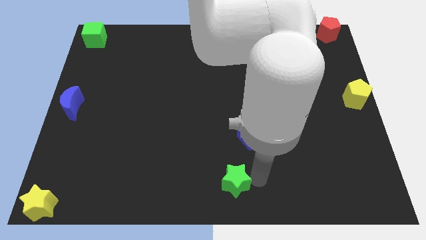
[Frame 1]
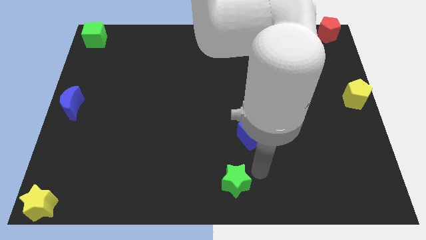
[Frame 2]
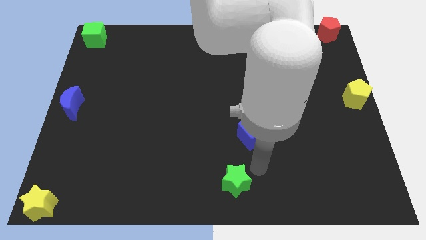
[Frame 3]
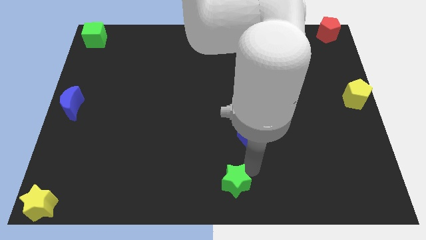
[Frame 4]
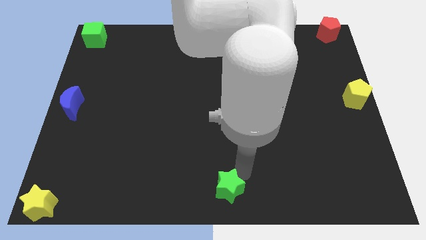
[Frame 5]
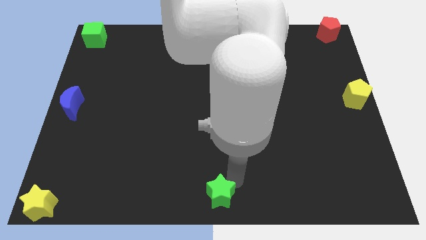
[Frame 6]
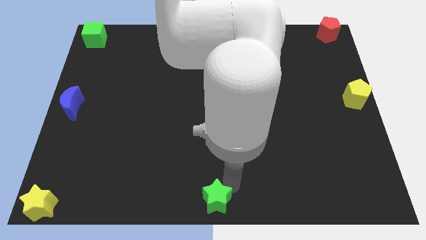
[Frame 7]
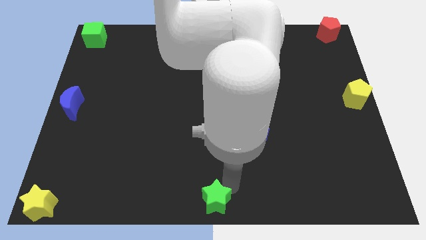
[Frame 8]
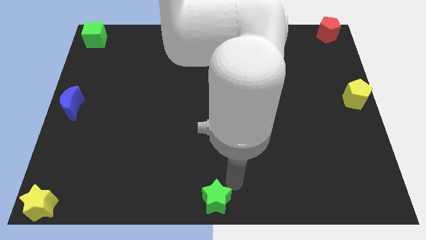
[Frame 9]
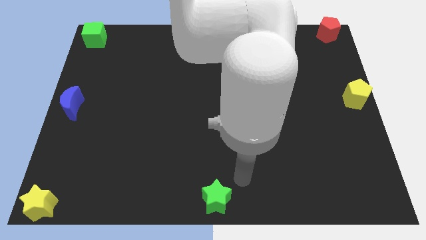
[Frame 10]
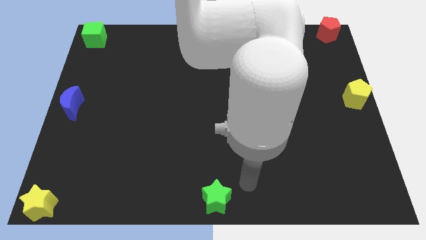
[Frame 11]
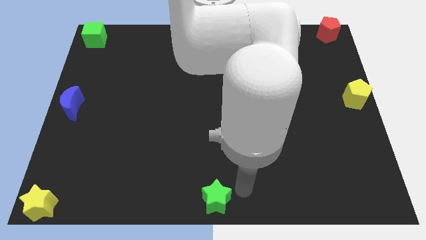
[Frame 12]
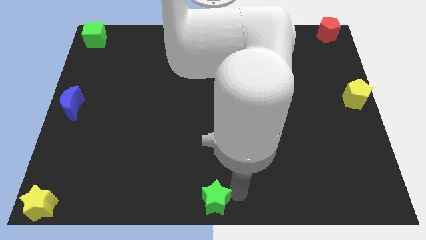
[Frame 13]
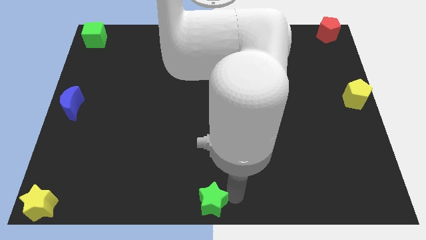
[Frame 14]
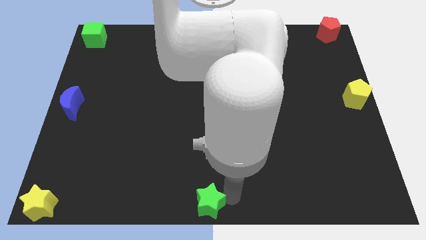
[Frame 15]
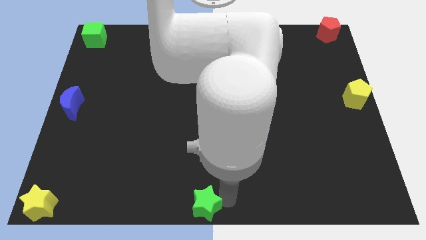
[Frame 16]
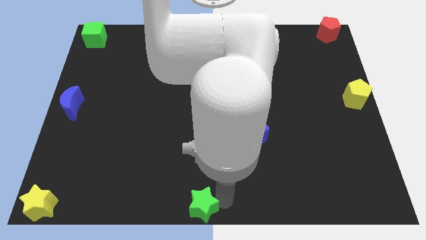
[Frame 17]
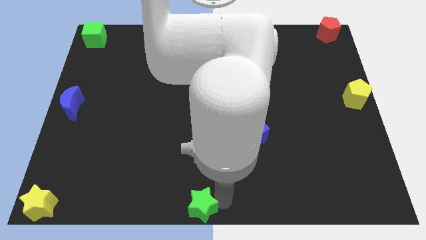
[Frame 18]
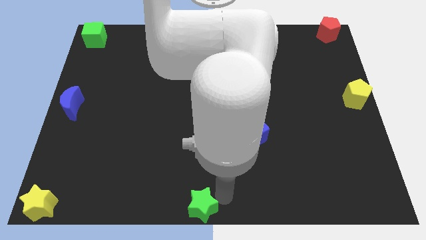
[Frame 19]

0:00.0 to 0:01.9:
place the green star at the bottom center

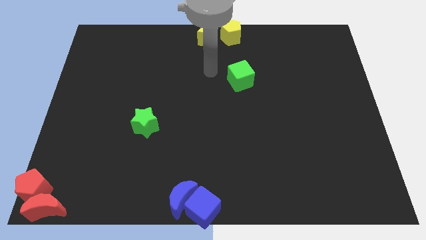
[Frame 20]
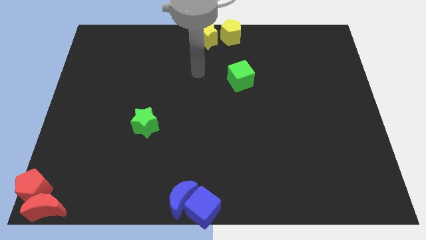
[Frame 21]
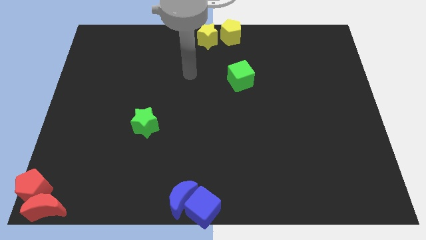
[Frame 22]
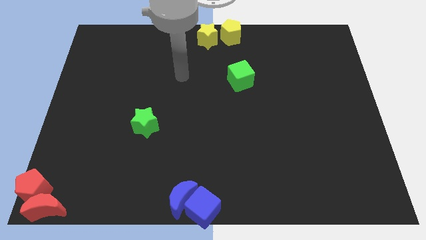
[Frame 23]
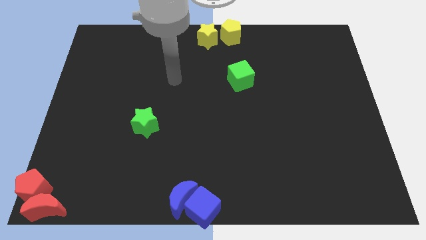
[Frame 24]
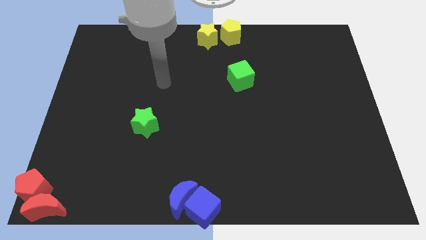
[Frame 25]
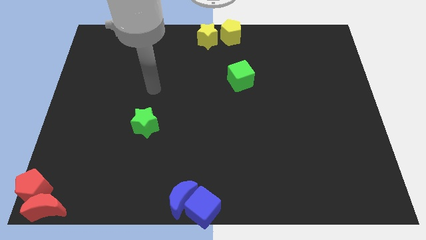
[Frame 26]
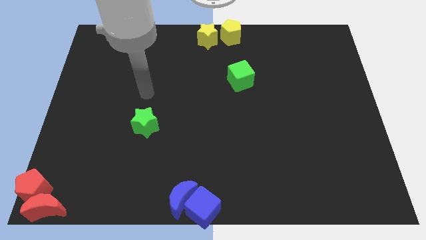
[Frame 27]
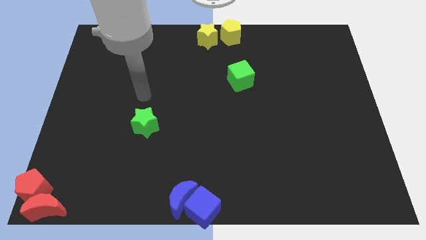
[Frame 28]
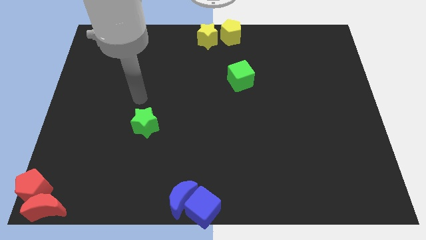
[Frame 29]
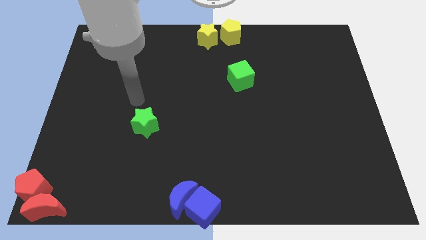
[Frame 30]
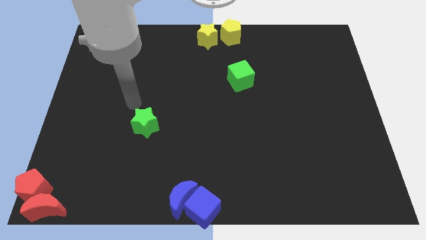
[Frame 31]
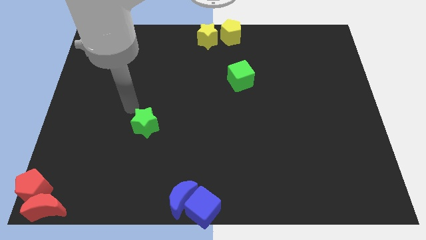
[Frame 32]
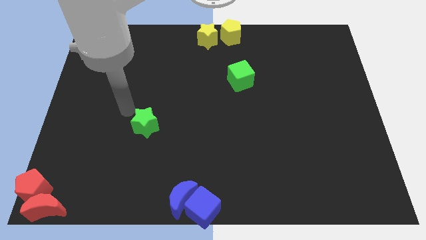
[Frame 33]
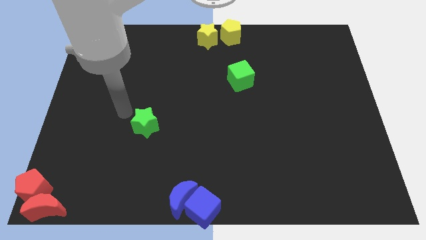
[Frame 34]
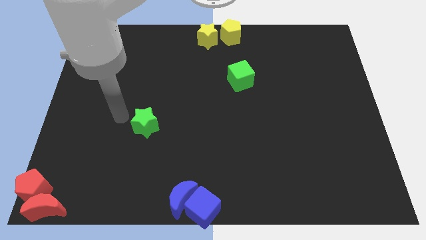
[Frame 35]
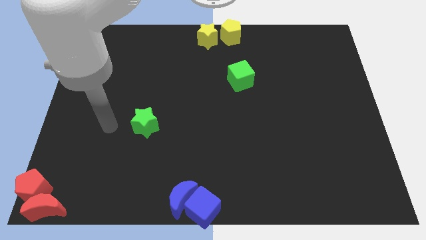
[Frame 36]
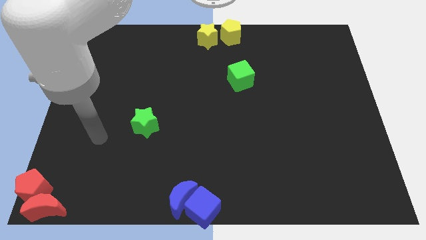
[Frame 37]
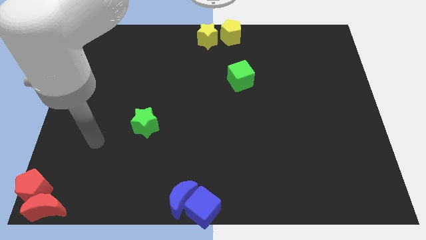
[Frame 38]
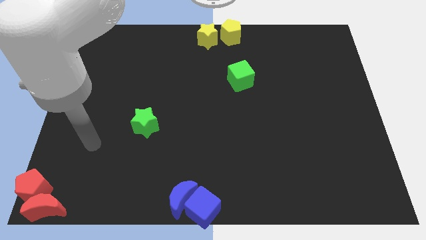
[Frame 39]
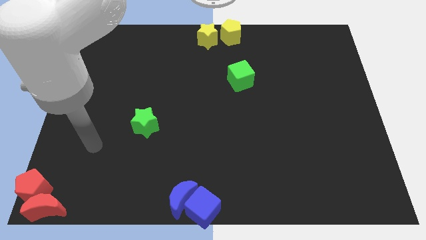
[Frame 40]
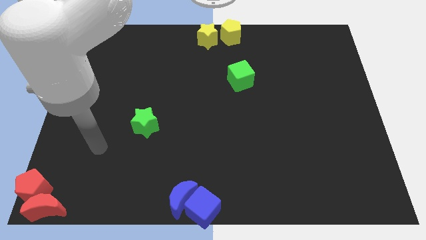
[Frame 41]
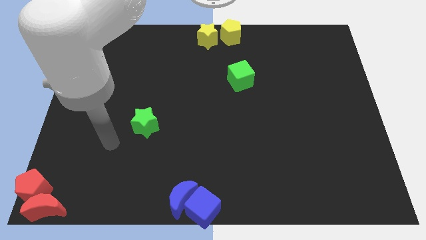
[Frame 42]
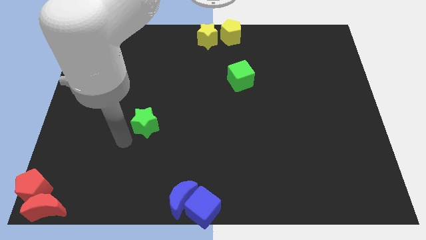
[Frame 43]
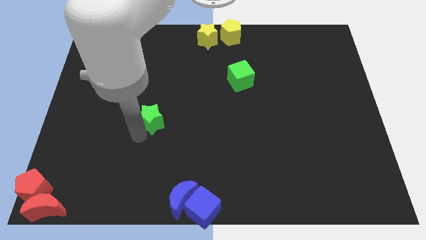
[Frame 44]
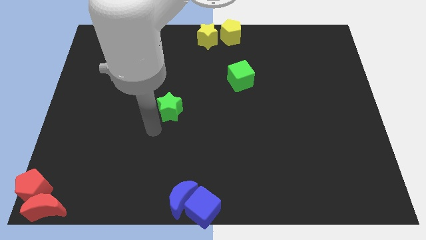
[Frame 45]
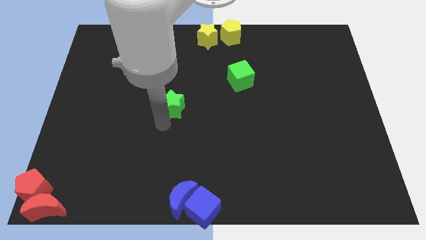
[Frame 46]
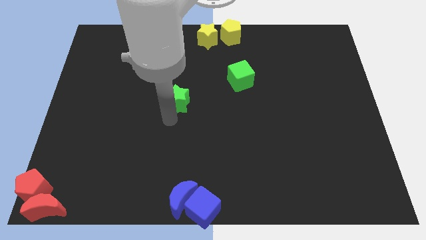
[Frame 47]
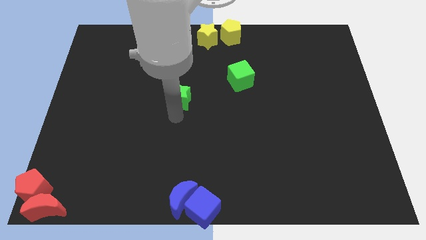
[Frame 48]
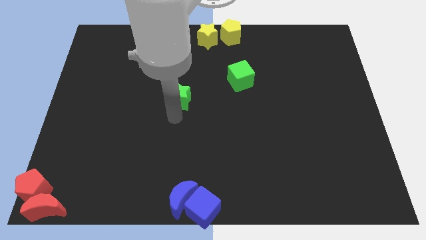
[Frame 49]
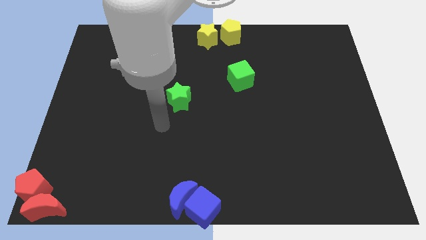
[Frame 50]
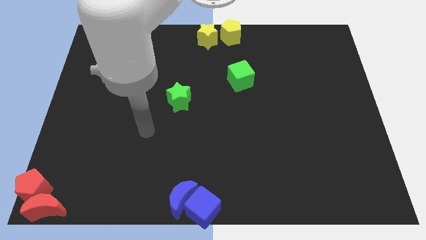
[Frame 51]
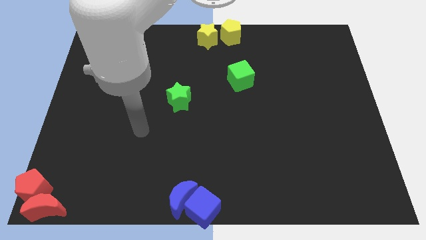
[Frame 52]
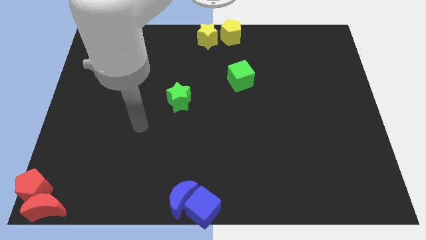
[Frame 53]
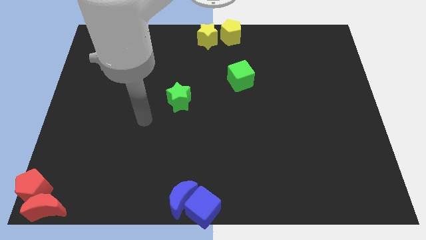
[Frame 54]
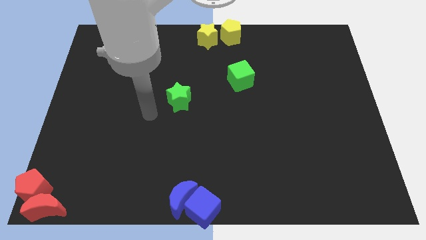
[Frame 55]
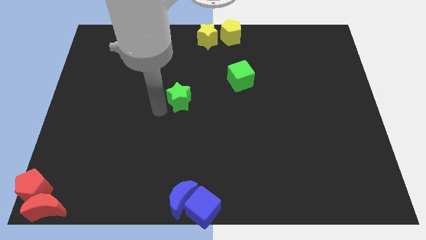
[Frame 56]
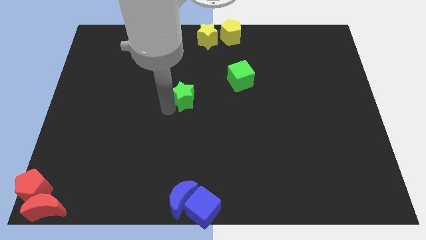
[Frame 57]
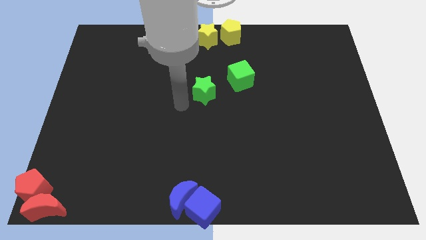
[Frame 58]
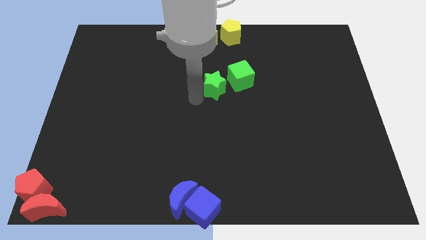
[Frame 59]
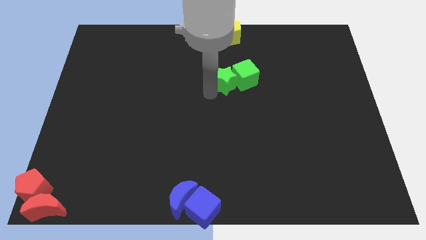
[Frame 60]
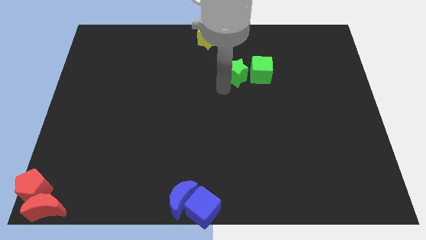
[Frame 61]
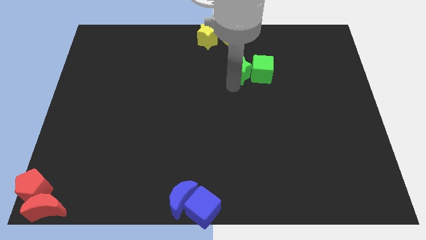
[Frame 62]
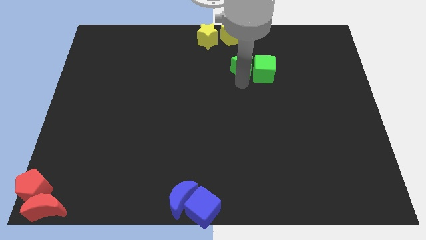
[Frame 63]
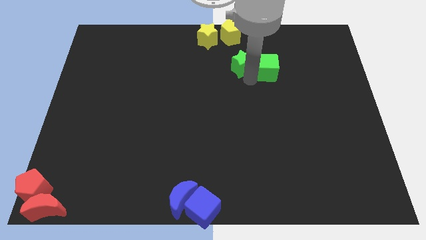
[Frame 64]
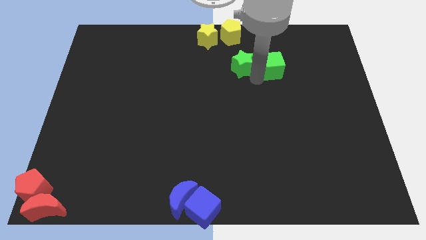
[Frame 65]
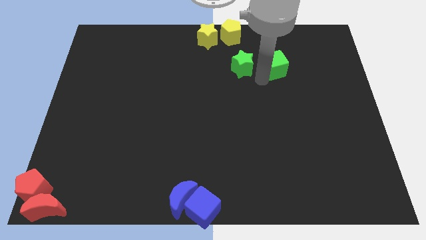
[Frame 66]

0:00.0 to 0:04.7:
push the green star into the green cube

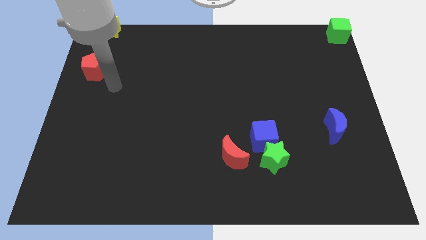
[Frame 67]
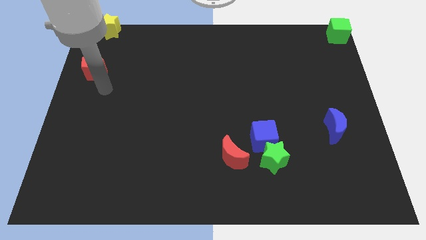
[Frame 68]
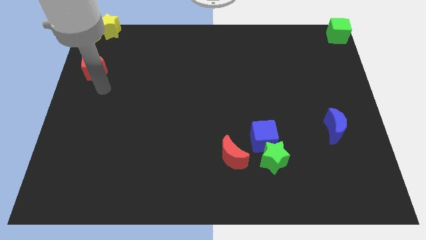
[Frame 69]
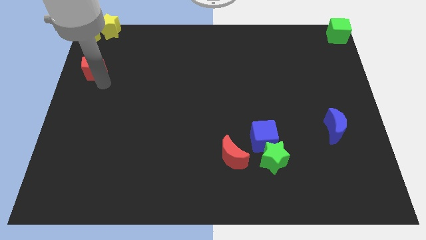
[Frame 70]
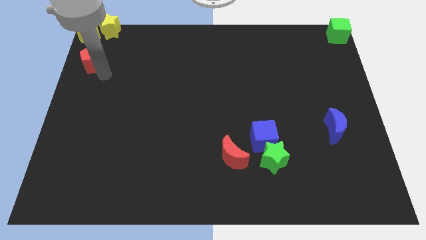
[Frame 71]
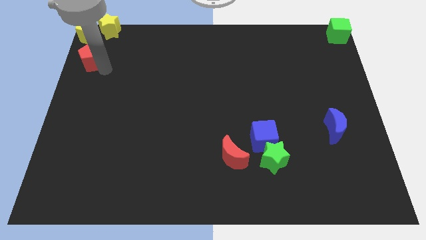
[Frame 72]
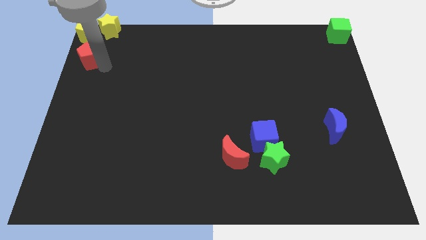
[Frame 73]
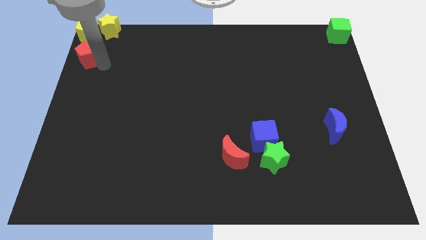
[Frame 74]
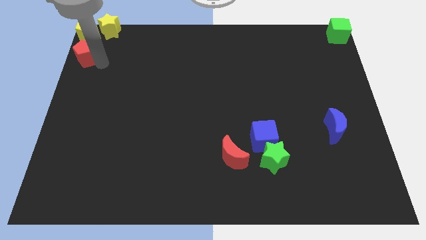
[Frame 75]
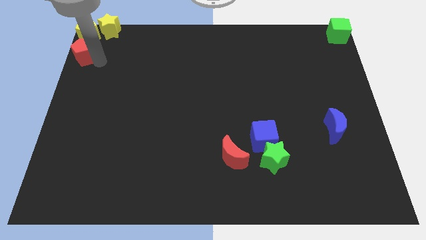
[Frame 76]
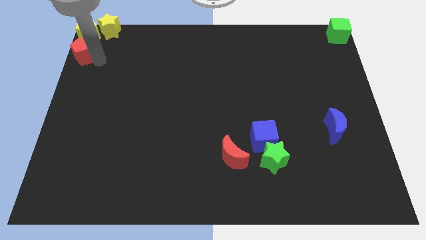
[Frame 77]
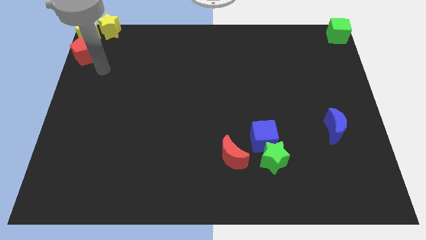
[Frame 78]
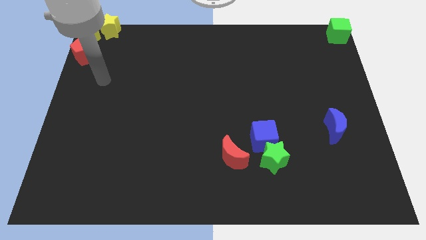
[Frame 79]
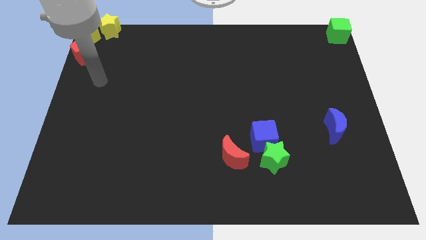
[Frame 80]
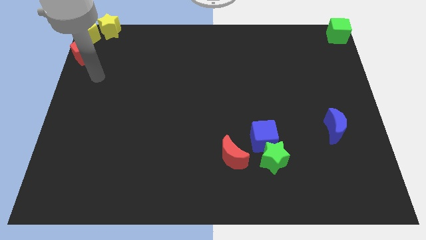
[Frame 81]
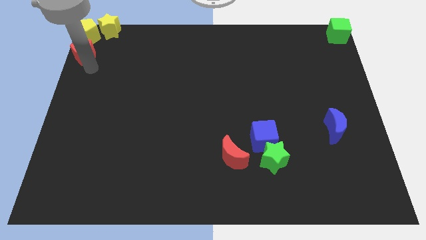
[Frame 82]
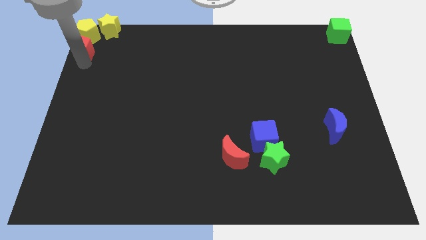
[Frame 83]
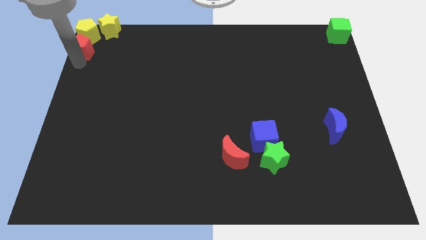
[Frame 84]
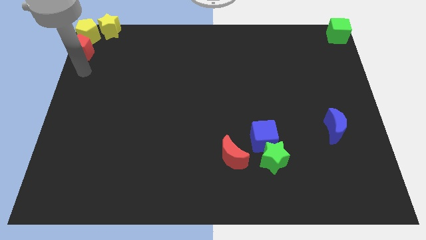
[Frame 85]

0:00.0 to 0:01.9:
place the red pentagon at the bottom side of the yellow pentagon

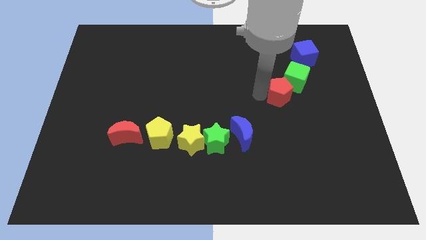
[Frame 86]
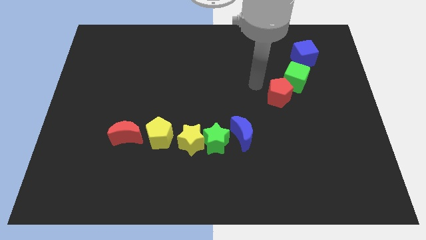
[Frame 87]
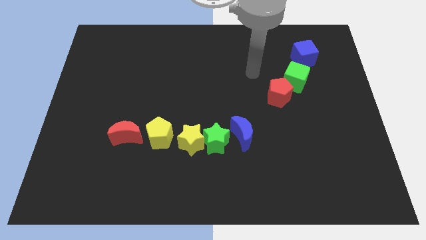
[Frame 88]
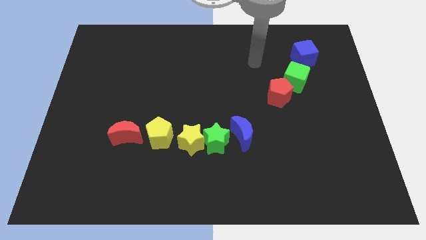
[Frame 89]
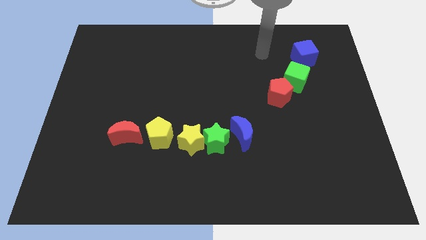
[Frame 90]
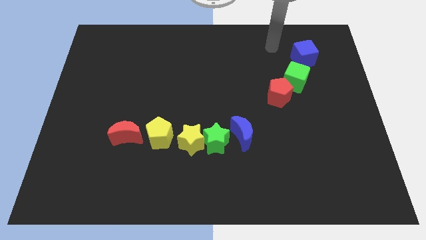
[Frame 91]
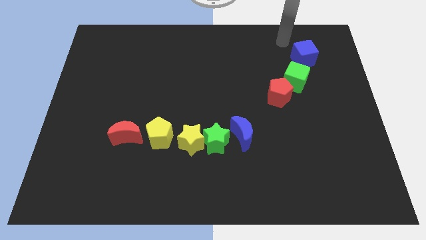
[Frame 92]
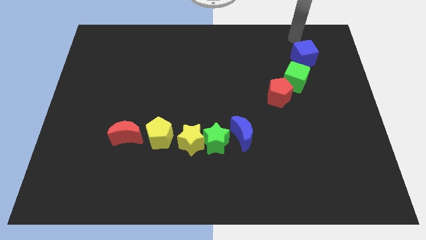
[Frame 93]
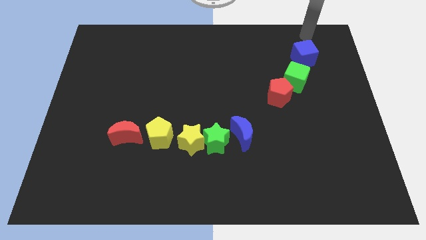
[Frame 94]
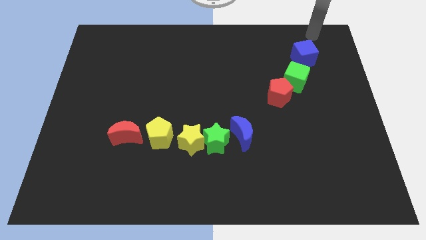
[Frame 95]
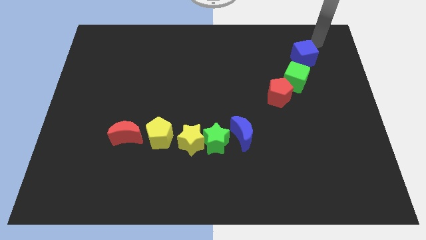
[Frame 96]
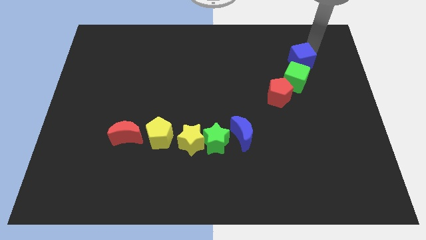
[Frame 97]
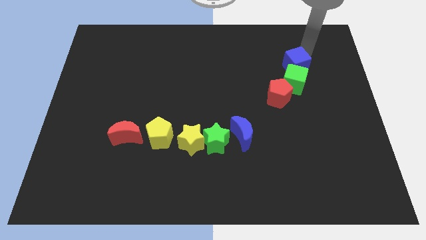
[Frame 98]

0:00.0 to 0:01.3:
move the blue cube slightly to the bottom
